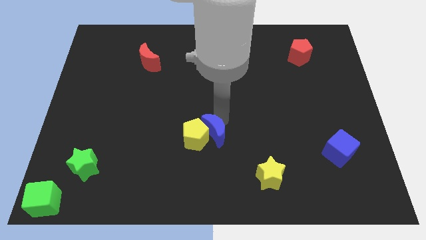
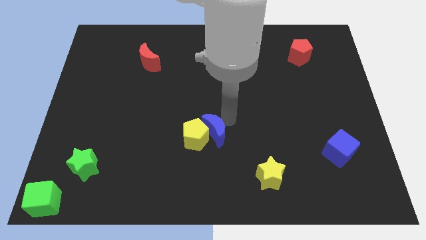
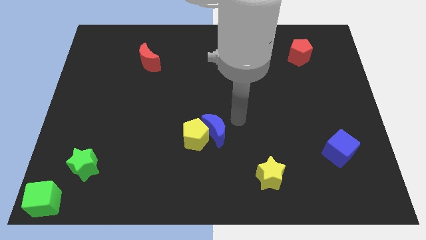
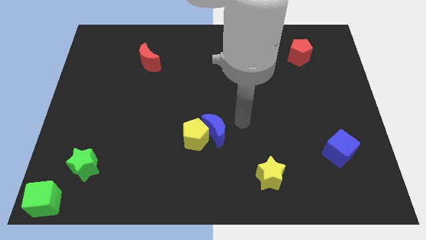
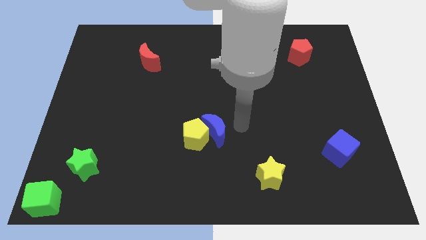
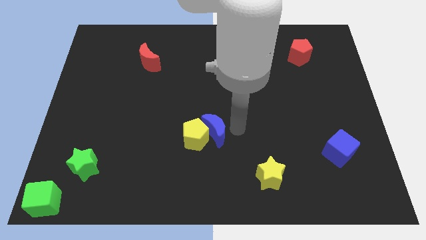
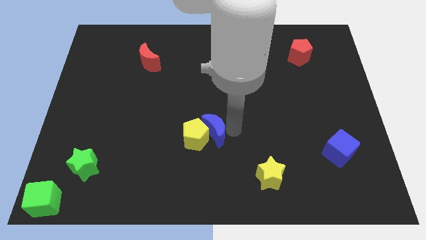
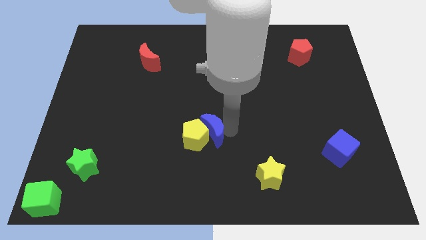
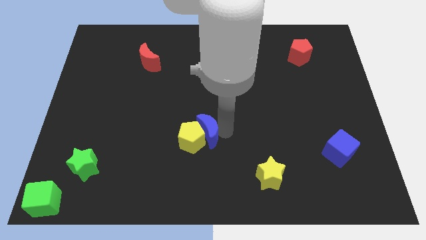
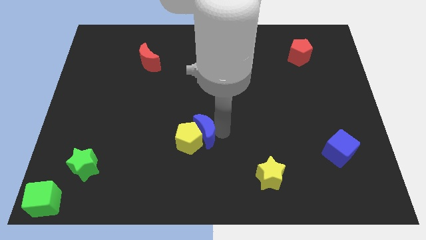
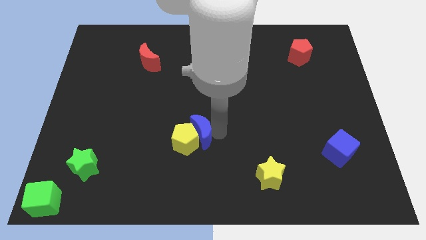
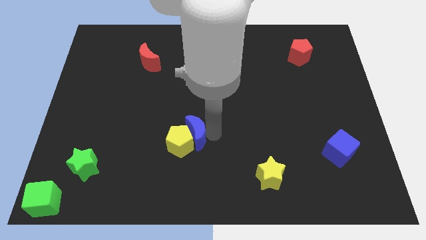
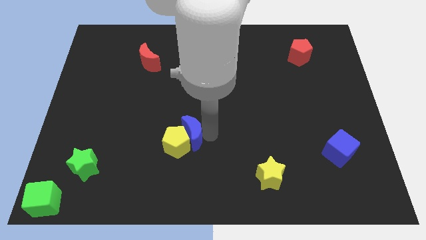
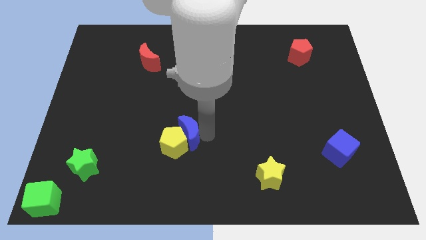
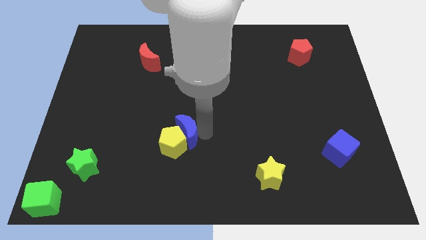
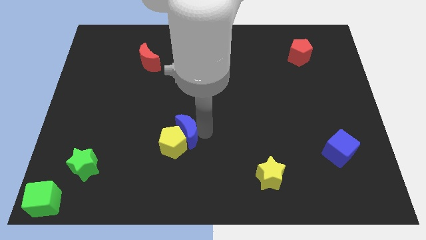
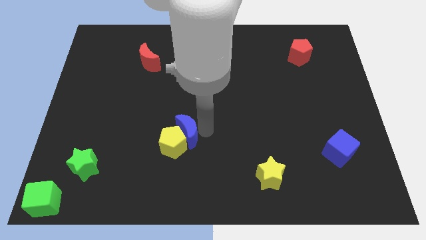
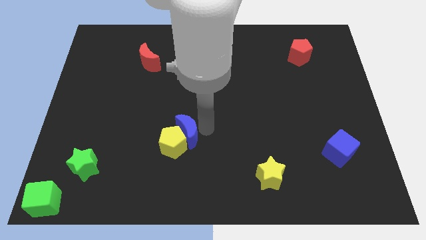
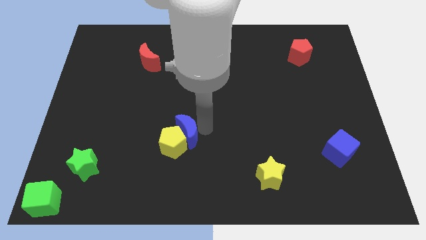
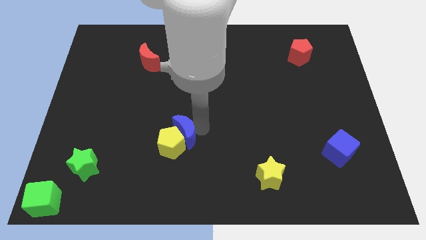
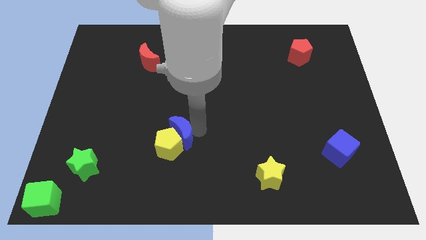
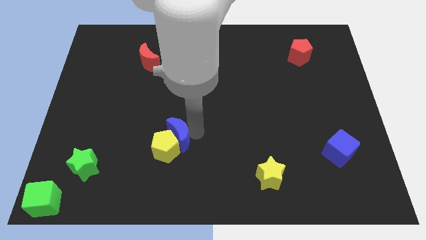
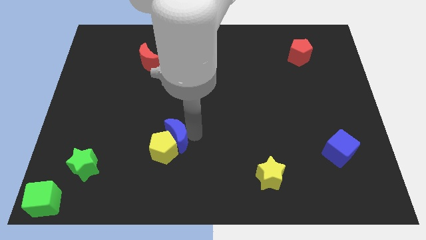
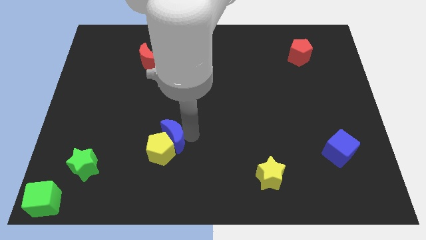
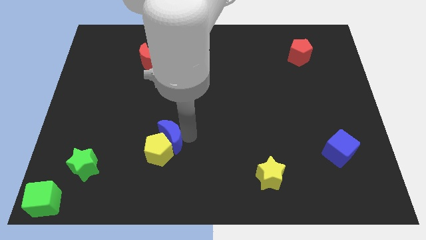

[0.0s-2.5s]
move blue crescent along with yellow pentagon towards the bottom left

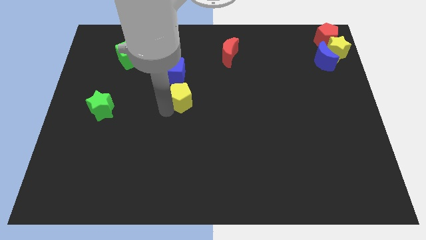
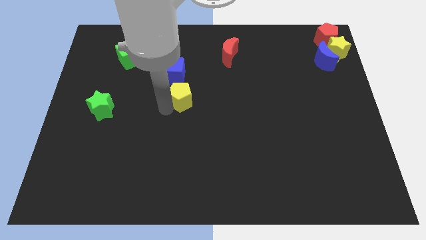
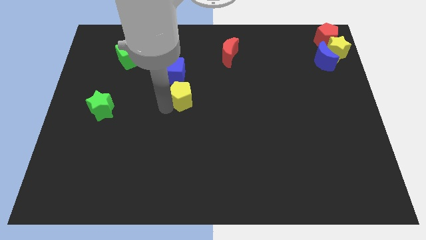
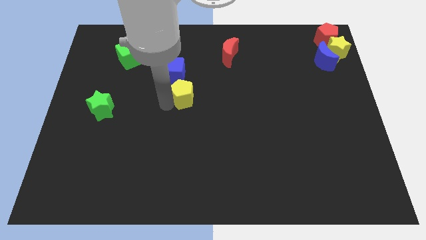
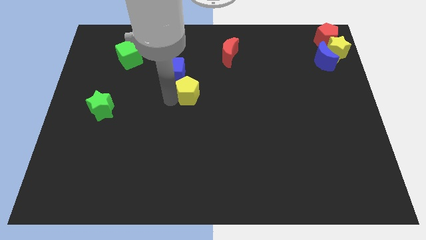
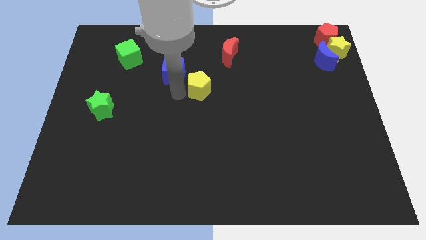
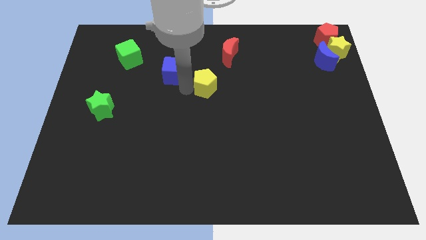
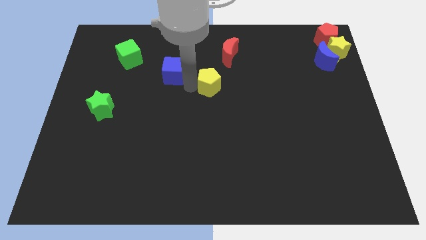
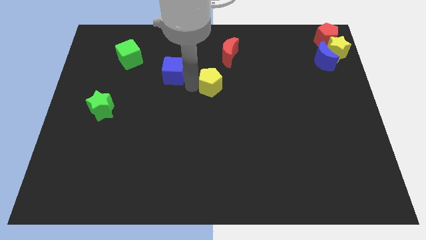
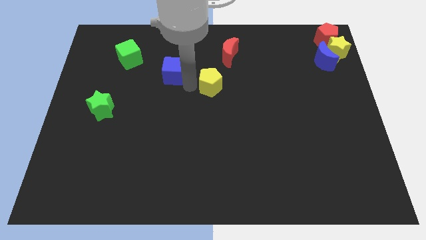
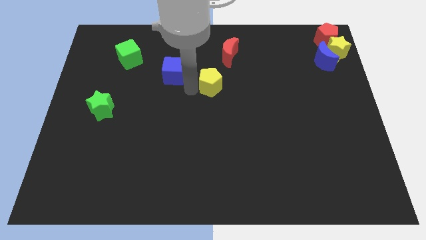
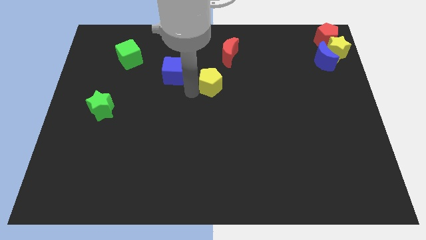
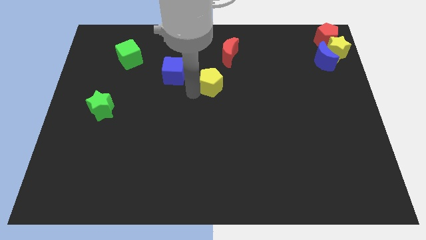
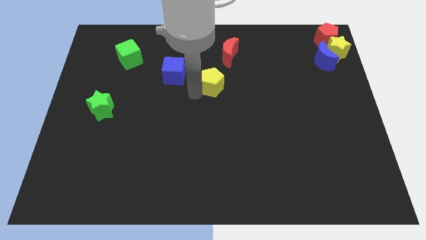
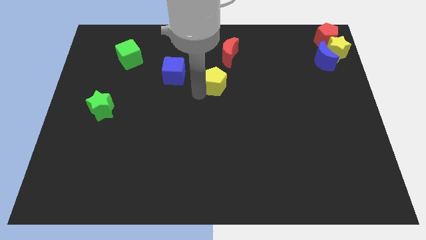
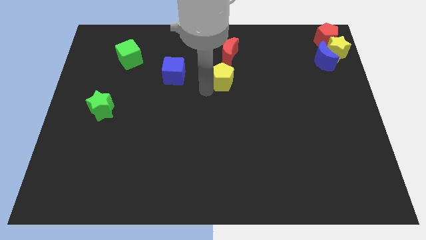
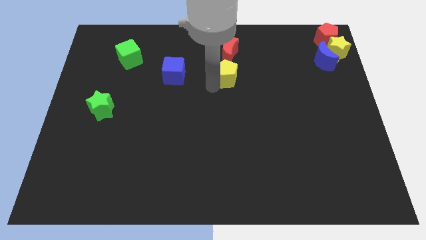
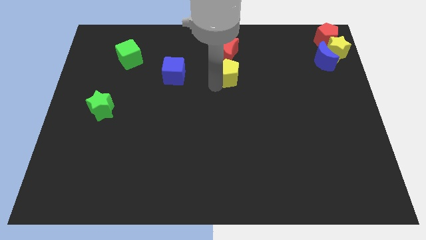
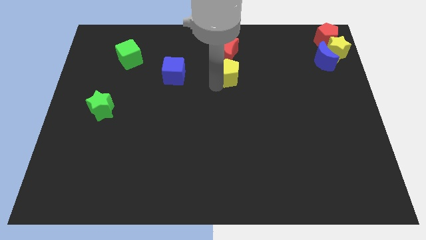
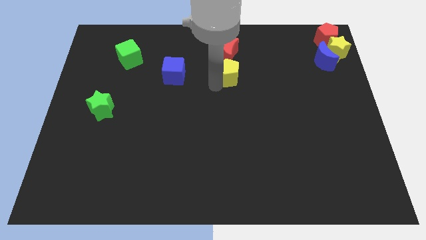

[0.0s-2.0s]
slide the yellow pentagon vertically below the red crescent

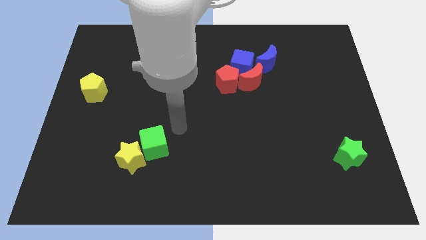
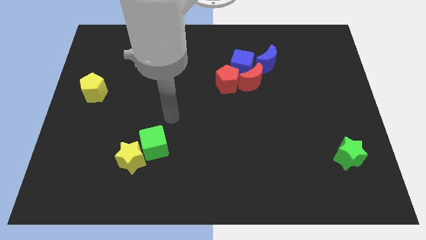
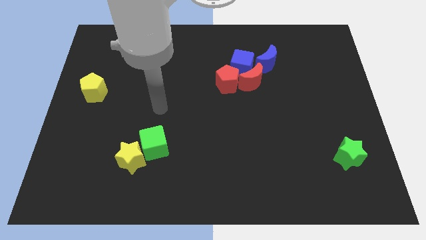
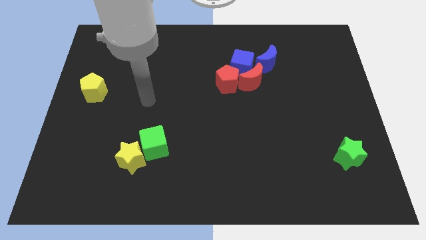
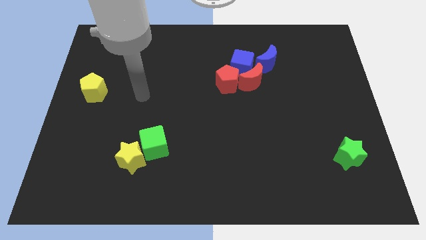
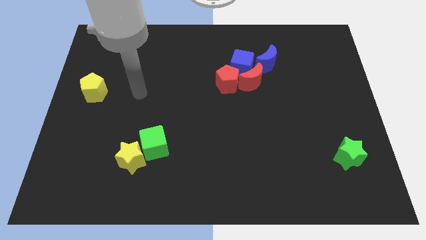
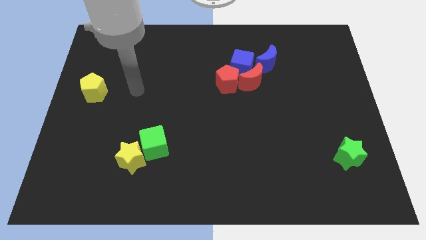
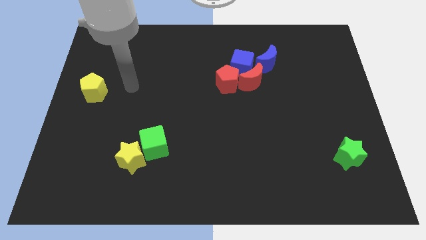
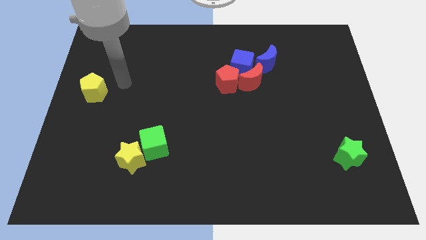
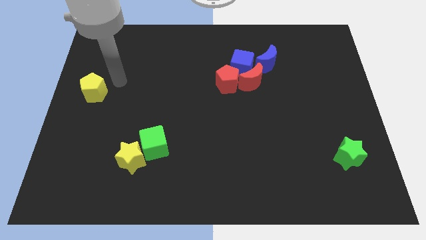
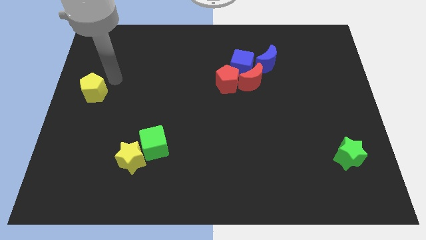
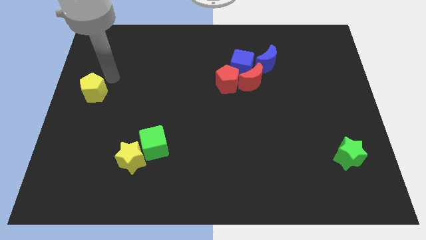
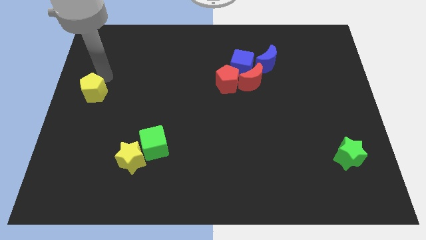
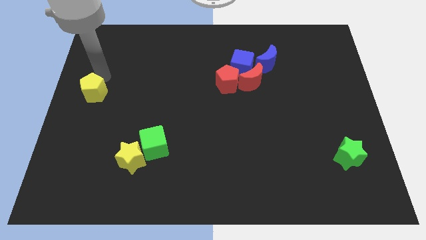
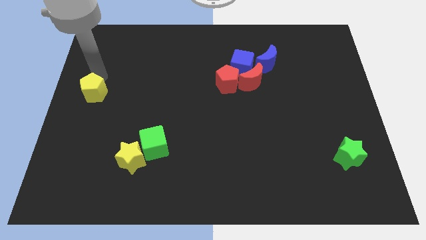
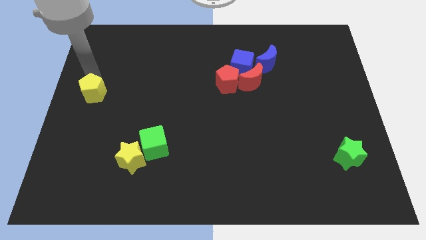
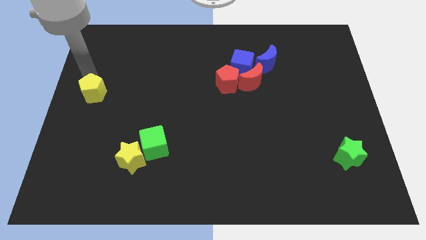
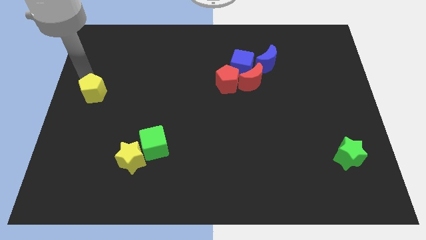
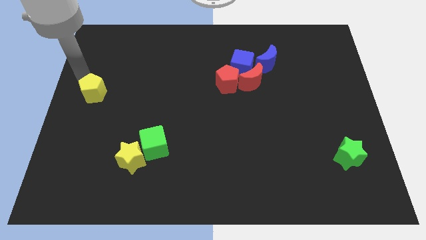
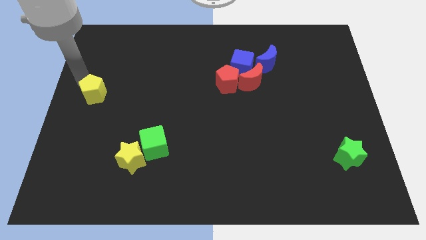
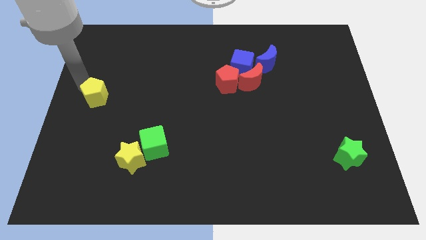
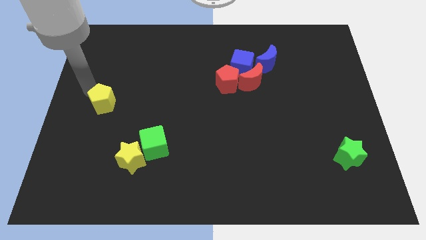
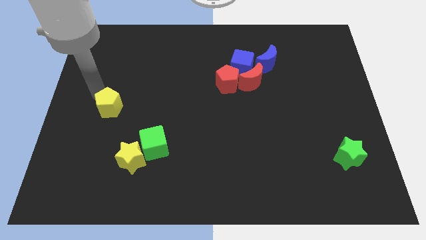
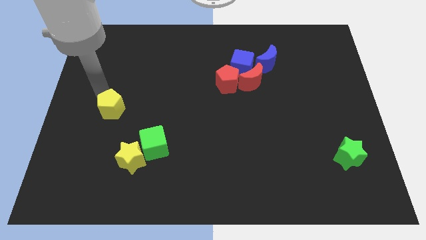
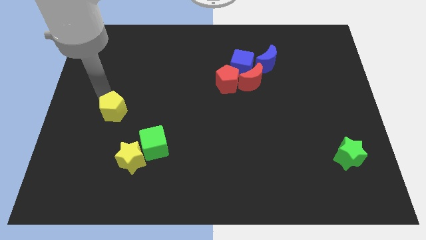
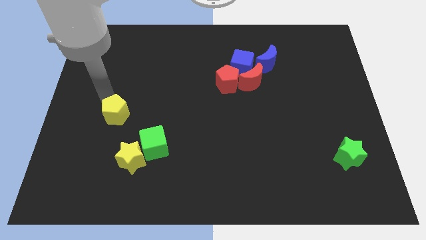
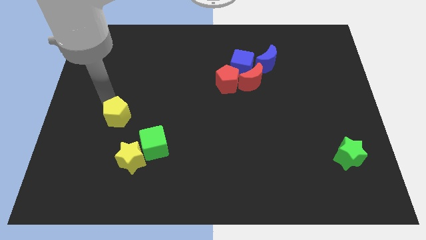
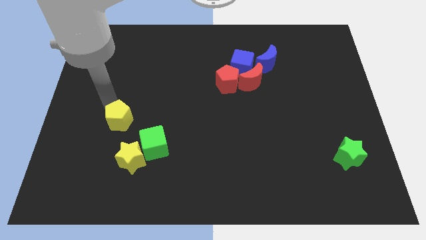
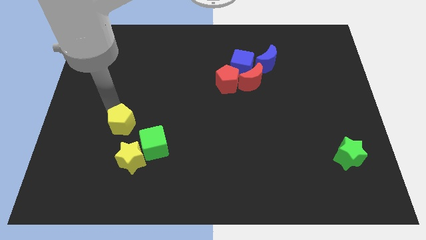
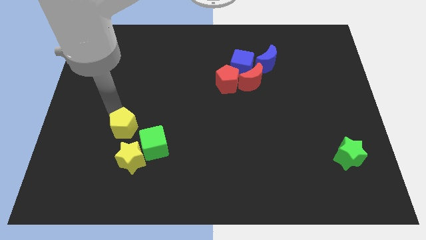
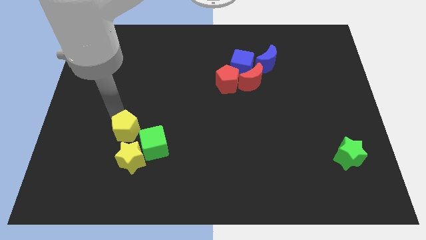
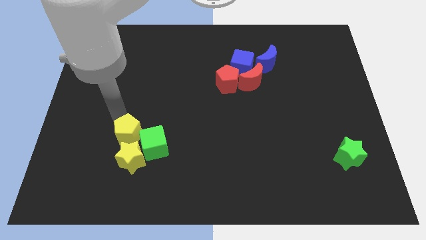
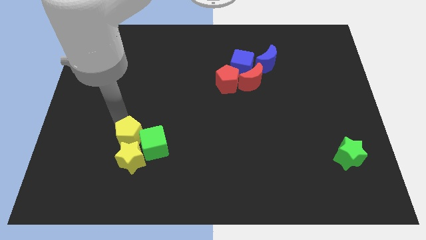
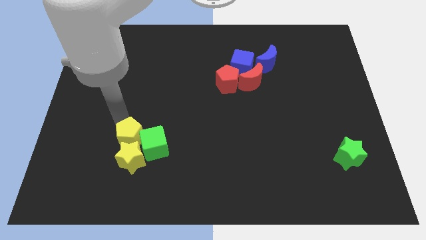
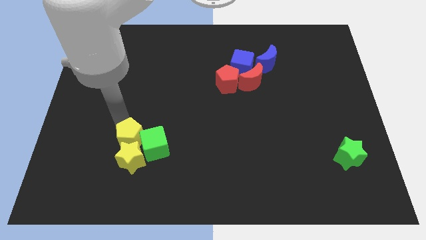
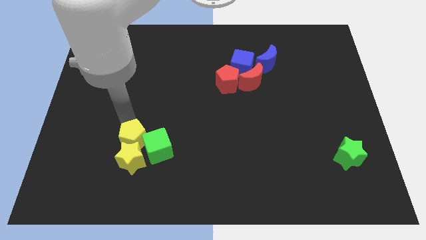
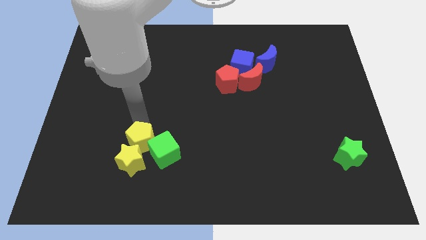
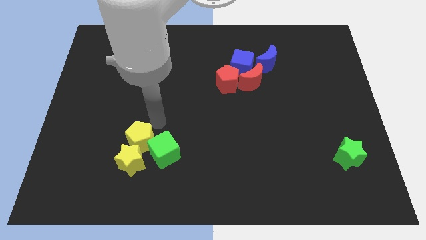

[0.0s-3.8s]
push the yellow pentagon above the green cube

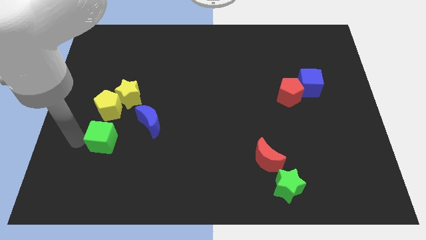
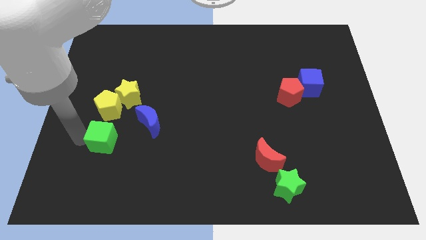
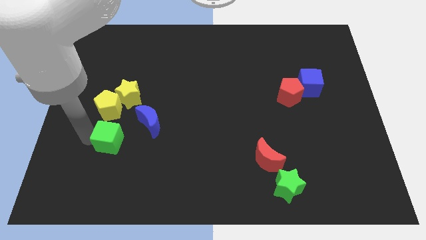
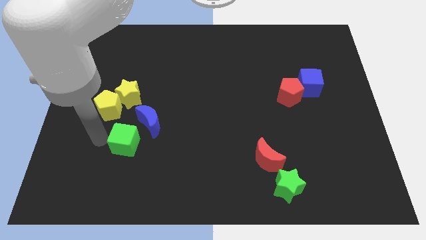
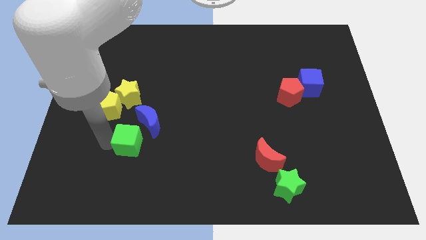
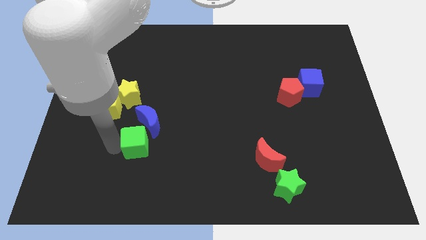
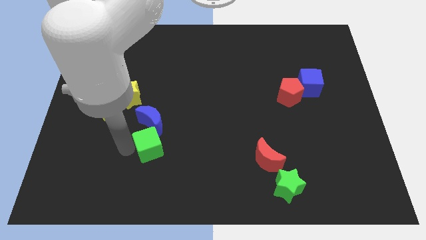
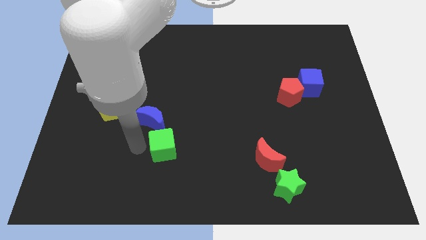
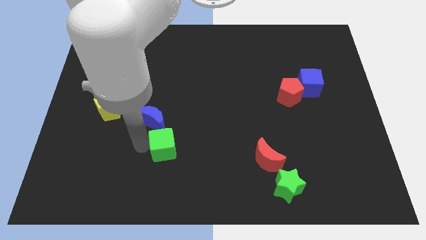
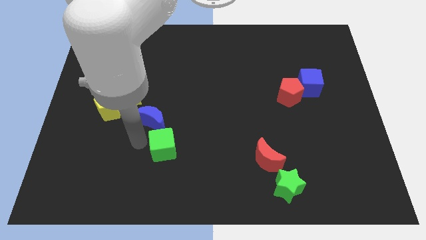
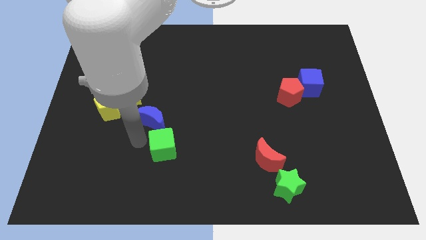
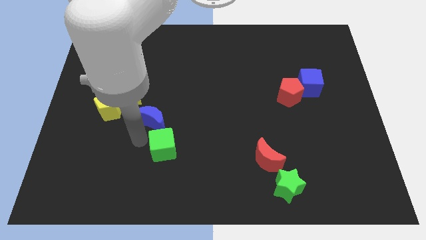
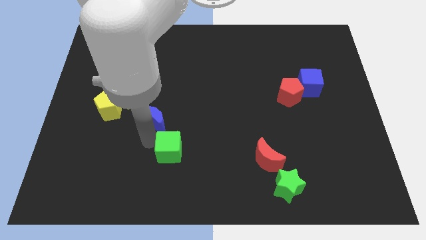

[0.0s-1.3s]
move the green cube away from the yellow pentagon
